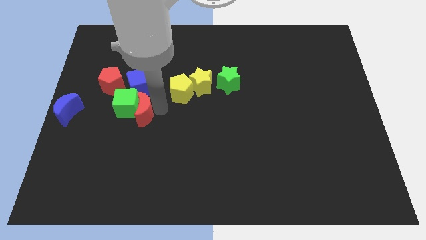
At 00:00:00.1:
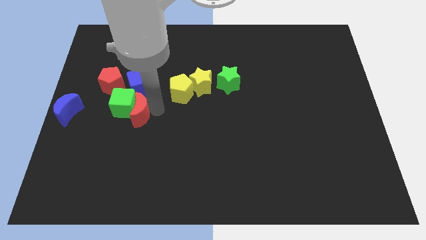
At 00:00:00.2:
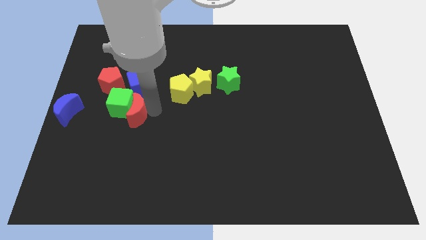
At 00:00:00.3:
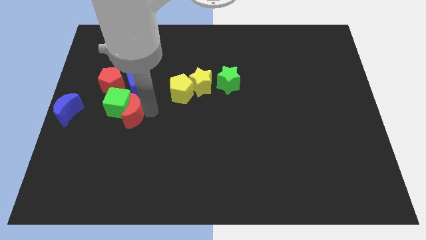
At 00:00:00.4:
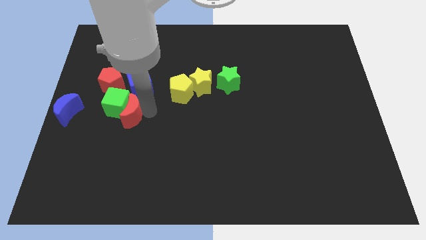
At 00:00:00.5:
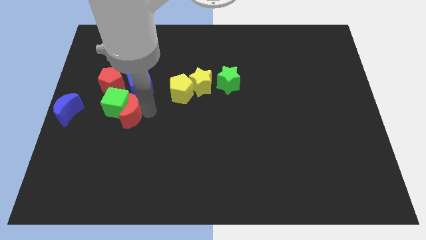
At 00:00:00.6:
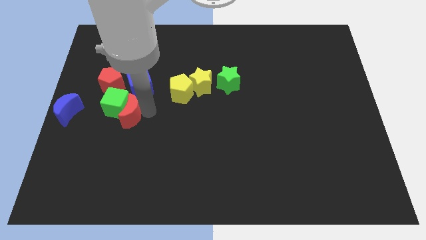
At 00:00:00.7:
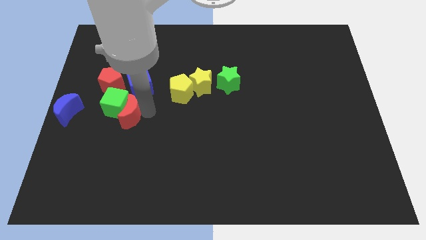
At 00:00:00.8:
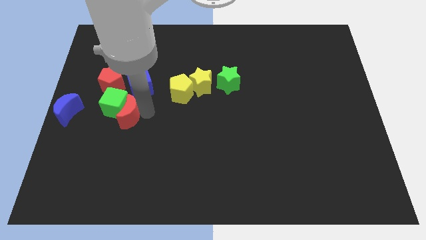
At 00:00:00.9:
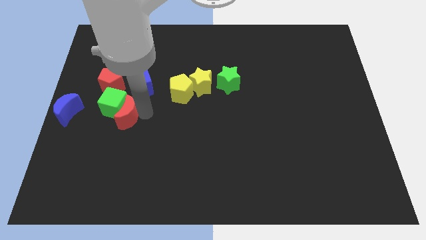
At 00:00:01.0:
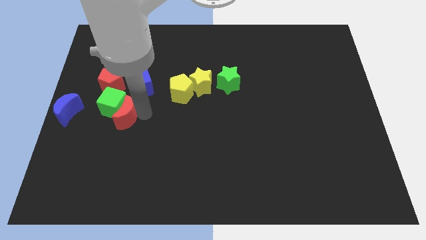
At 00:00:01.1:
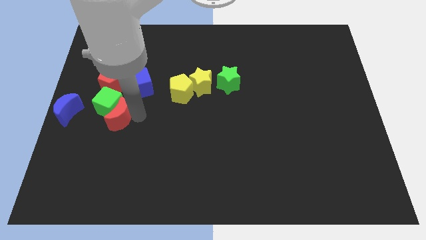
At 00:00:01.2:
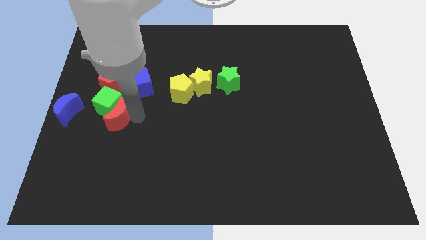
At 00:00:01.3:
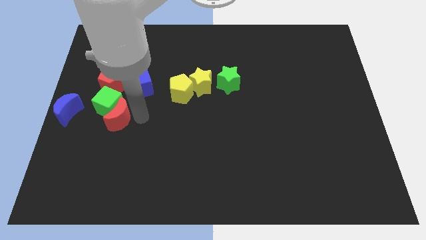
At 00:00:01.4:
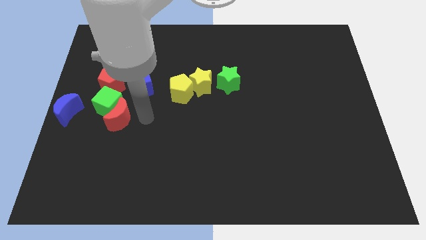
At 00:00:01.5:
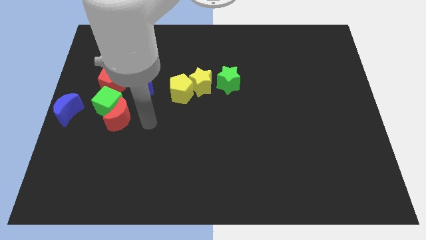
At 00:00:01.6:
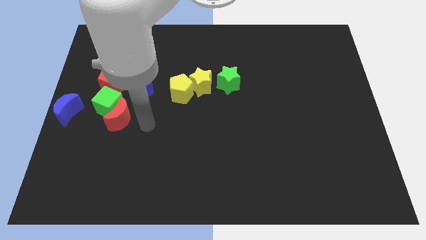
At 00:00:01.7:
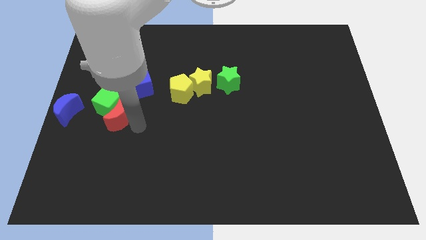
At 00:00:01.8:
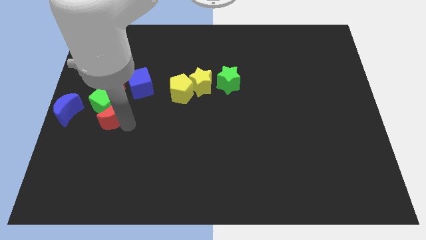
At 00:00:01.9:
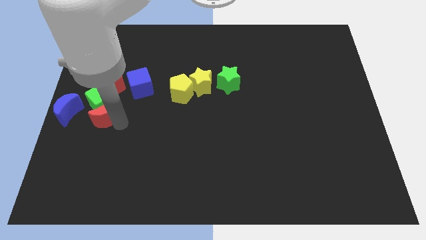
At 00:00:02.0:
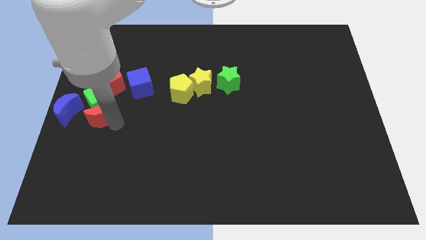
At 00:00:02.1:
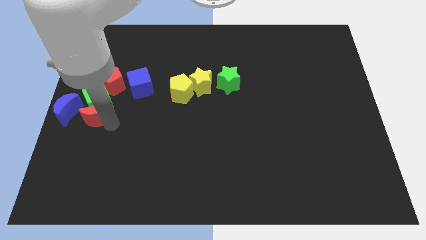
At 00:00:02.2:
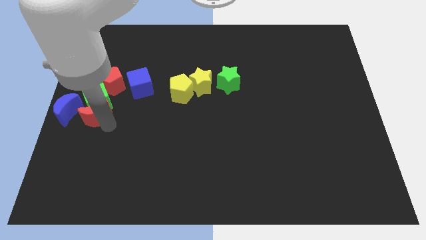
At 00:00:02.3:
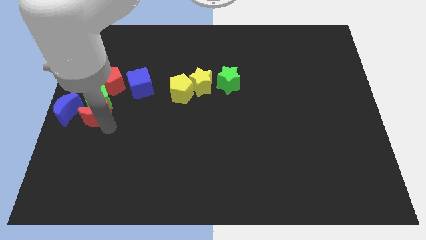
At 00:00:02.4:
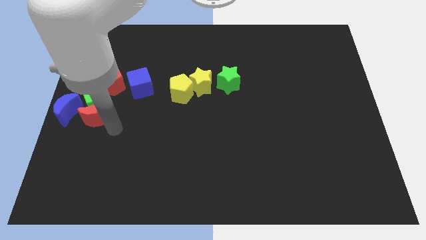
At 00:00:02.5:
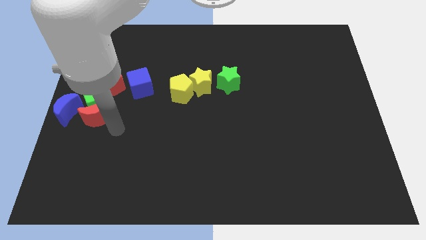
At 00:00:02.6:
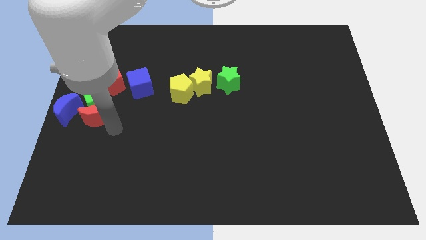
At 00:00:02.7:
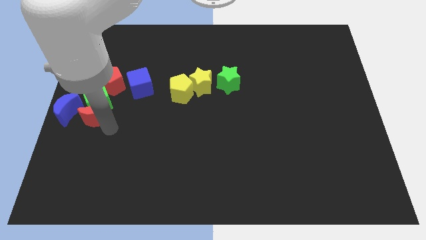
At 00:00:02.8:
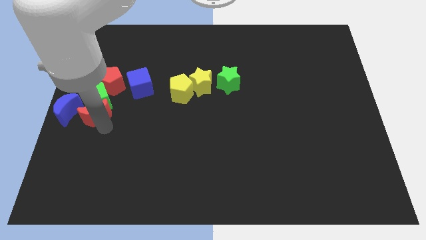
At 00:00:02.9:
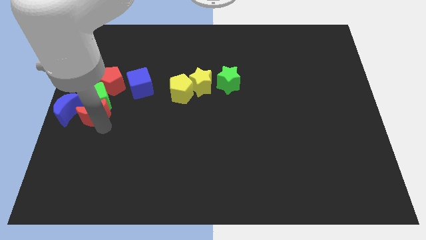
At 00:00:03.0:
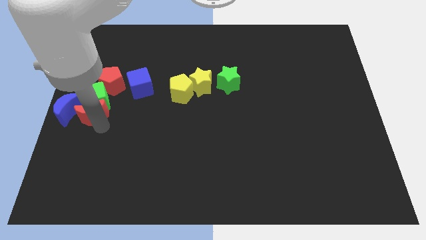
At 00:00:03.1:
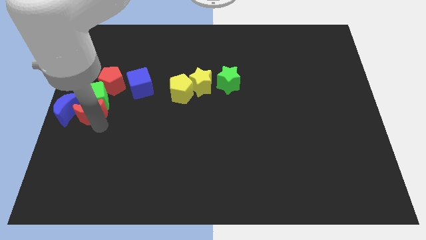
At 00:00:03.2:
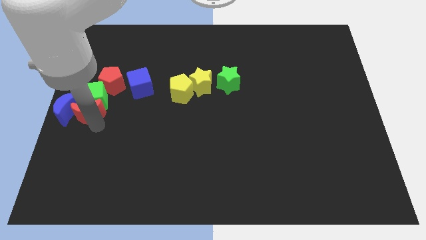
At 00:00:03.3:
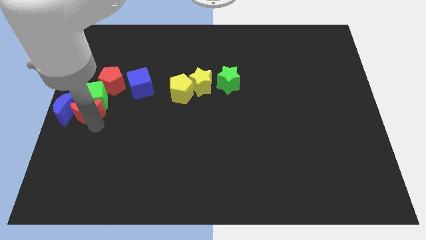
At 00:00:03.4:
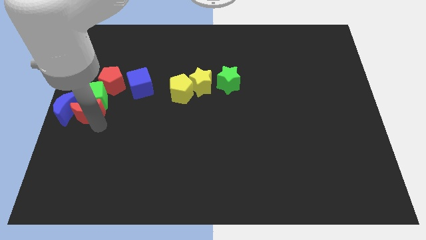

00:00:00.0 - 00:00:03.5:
put the green cube red moon and blue crescent together at the left side of the board

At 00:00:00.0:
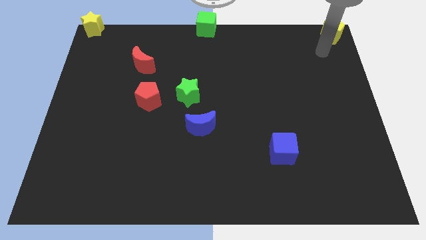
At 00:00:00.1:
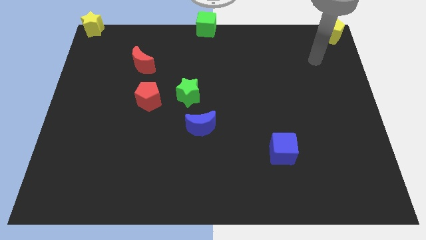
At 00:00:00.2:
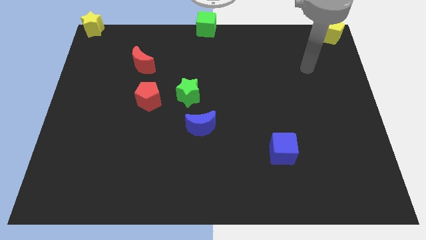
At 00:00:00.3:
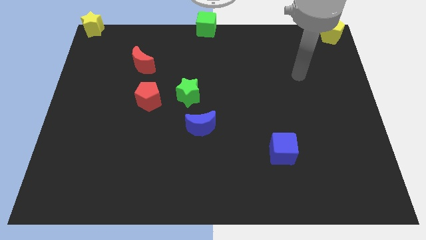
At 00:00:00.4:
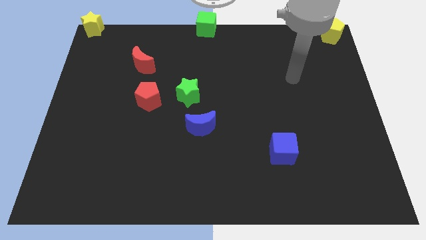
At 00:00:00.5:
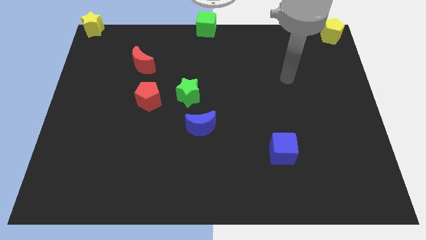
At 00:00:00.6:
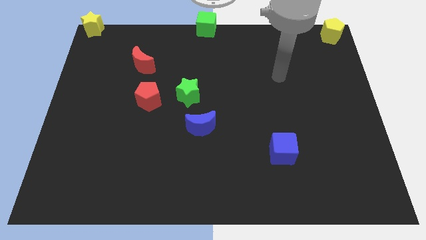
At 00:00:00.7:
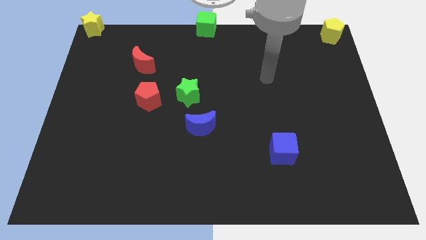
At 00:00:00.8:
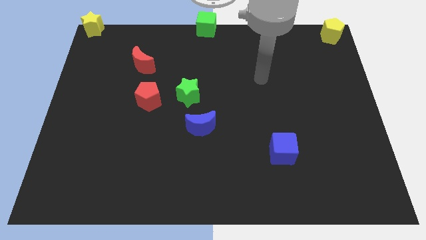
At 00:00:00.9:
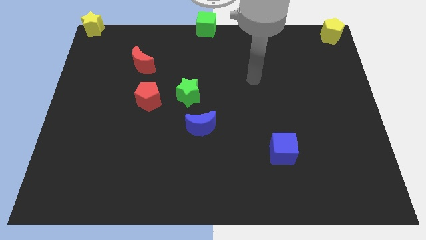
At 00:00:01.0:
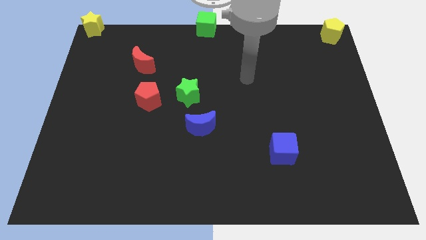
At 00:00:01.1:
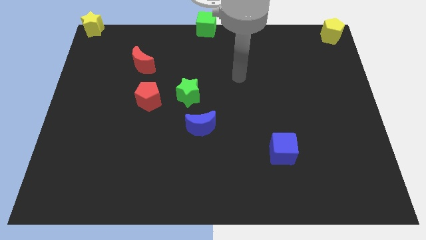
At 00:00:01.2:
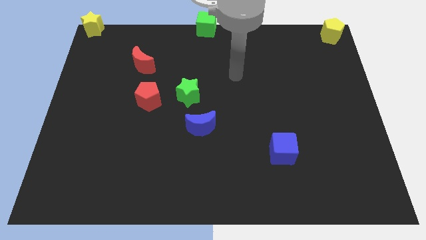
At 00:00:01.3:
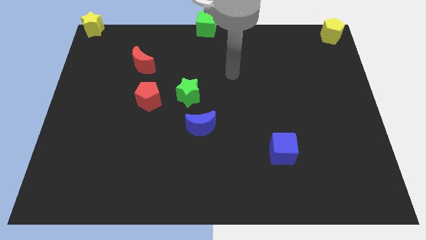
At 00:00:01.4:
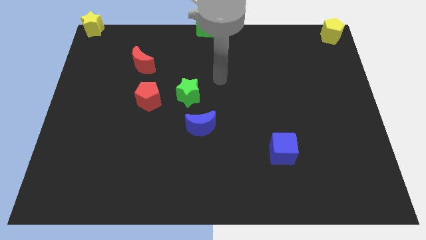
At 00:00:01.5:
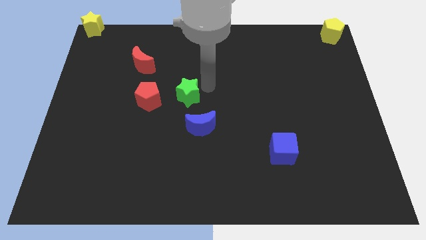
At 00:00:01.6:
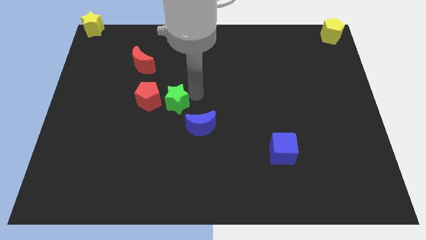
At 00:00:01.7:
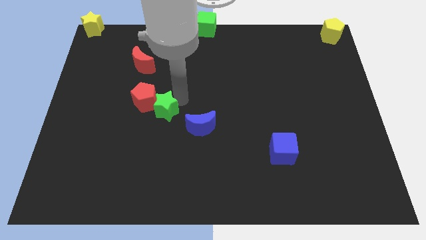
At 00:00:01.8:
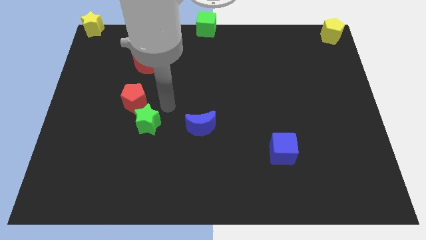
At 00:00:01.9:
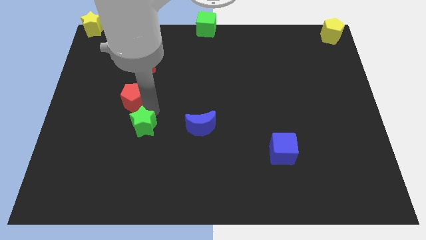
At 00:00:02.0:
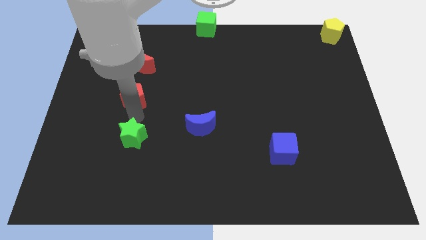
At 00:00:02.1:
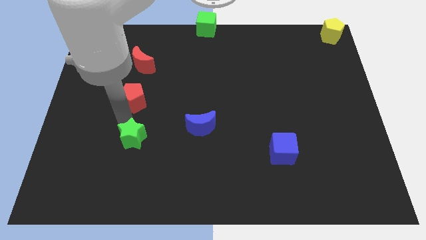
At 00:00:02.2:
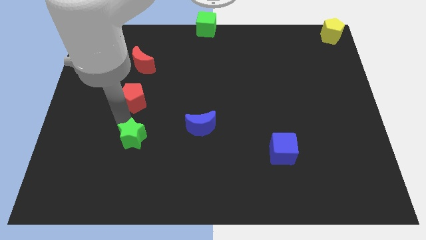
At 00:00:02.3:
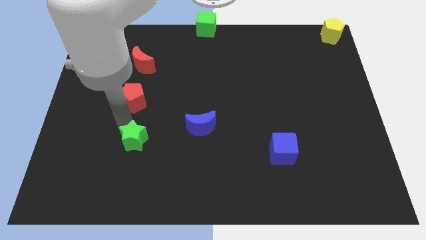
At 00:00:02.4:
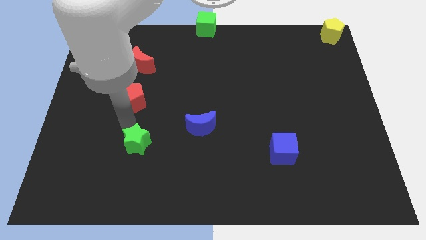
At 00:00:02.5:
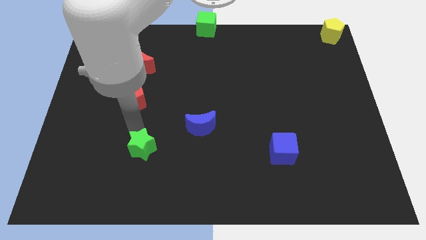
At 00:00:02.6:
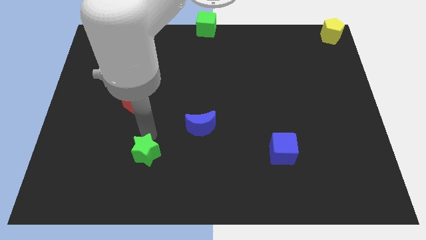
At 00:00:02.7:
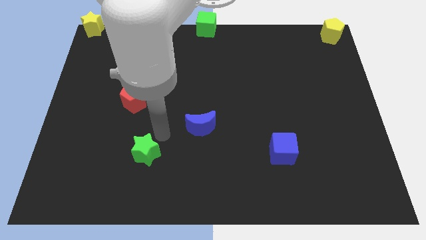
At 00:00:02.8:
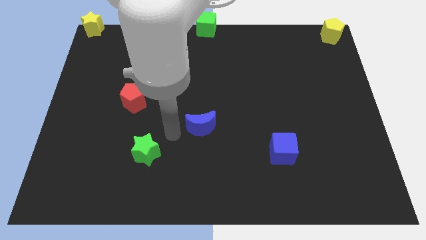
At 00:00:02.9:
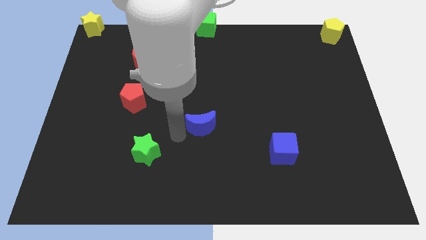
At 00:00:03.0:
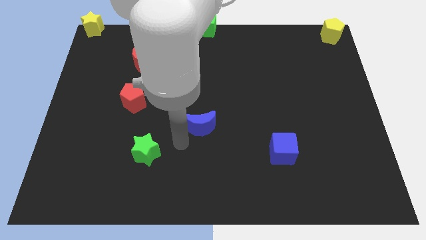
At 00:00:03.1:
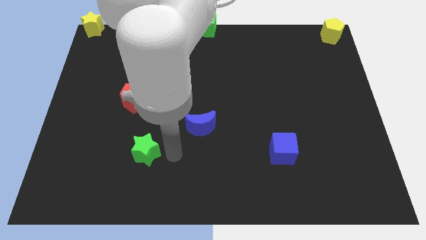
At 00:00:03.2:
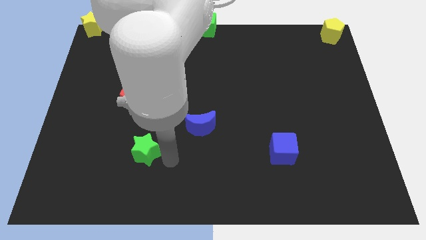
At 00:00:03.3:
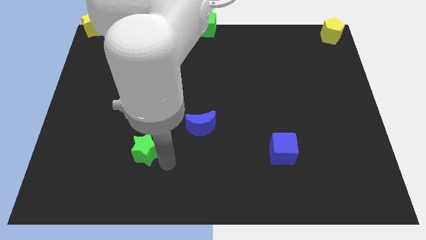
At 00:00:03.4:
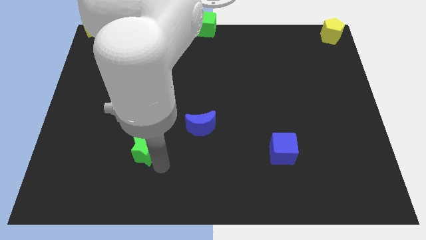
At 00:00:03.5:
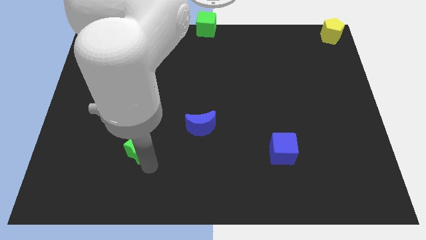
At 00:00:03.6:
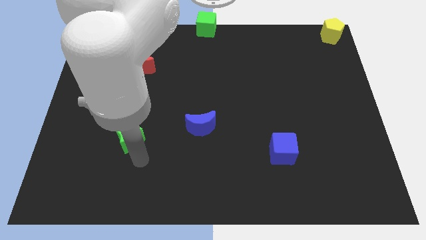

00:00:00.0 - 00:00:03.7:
slide the green star vertically below the red pentagon

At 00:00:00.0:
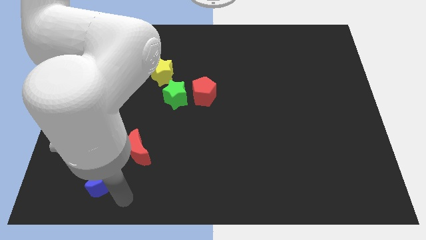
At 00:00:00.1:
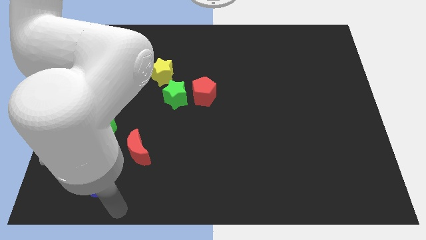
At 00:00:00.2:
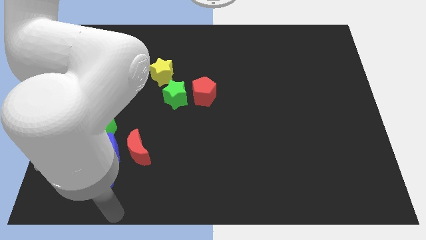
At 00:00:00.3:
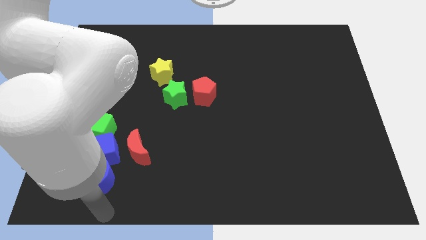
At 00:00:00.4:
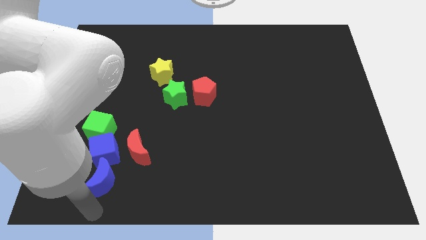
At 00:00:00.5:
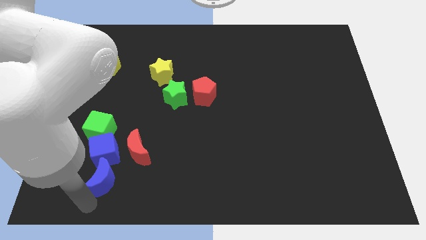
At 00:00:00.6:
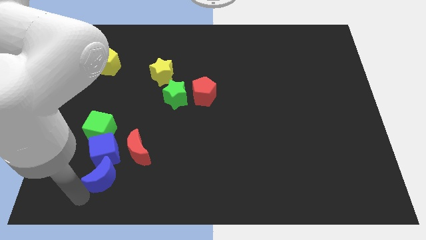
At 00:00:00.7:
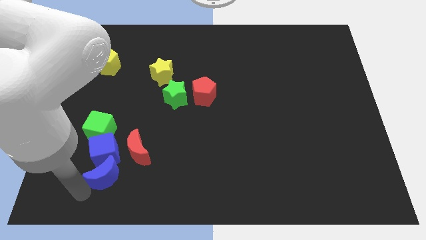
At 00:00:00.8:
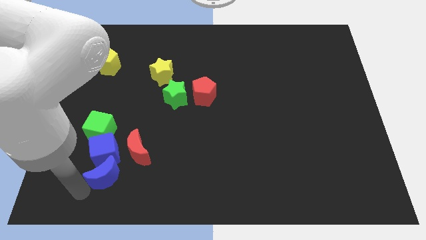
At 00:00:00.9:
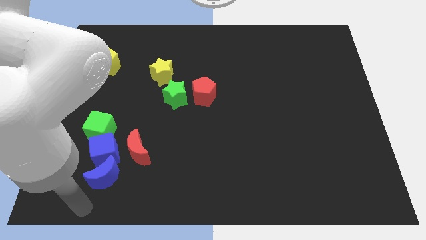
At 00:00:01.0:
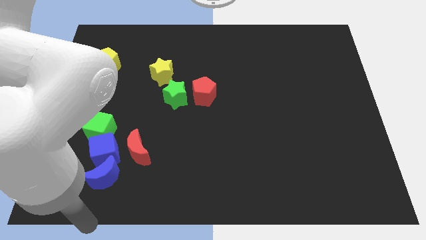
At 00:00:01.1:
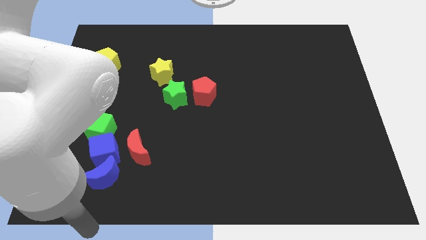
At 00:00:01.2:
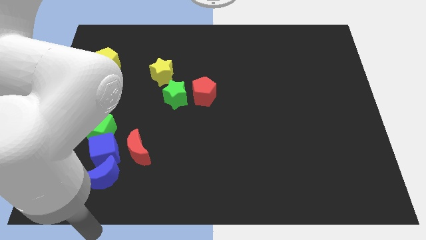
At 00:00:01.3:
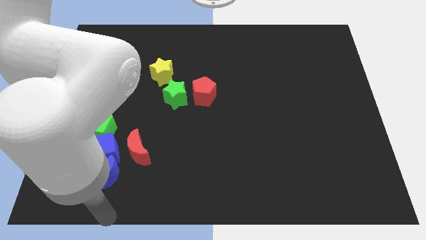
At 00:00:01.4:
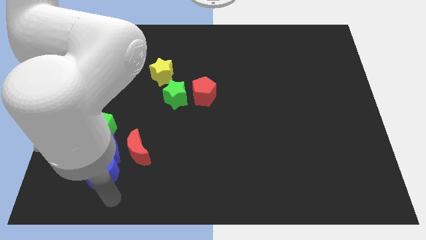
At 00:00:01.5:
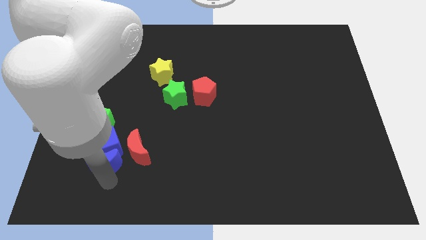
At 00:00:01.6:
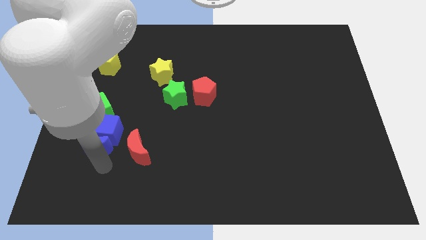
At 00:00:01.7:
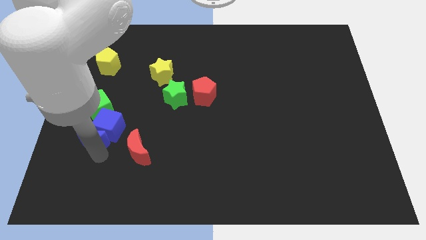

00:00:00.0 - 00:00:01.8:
move the blue blocks slightly towards top
